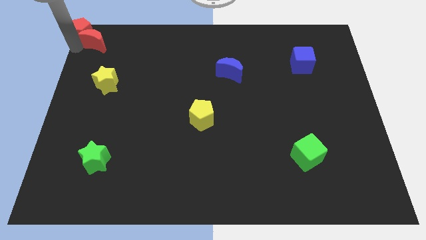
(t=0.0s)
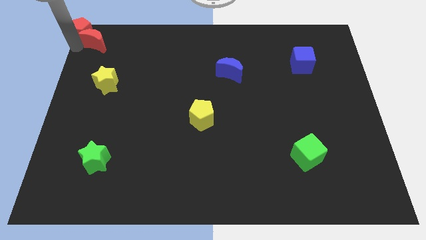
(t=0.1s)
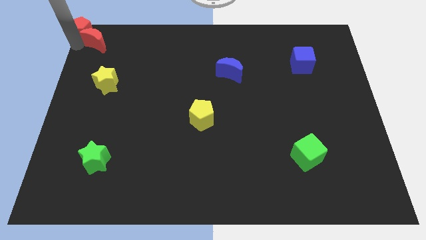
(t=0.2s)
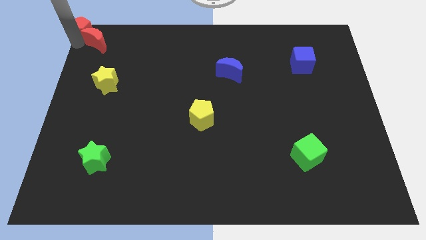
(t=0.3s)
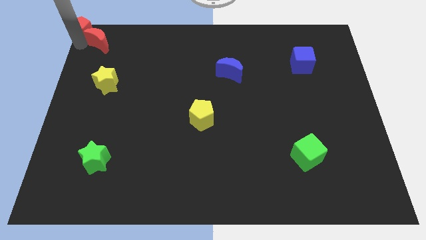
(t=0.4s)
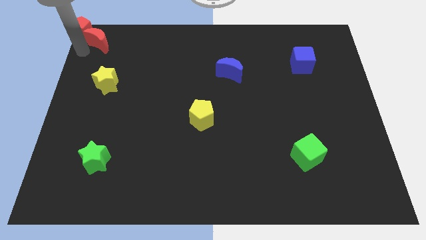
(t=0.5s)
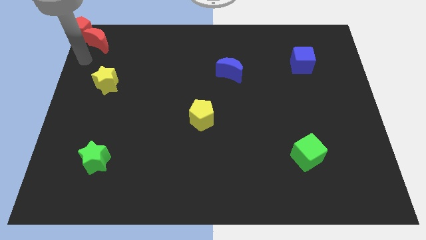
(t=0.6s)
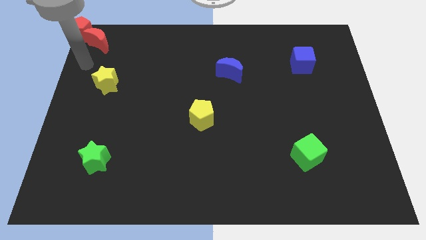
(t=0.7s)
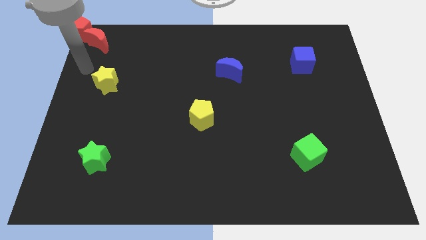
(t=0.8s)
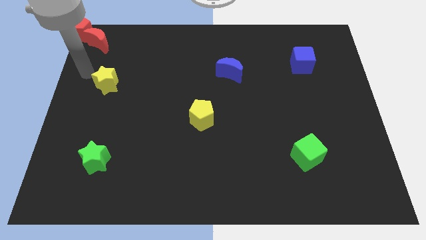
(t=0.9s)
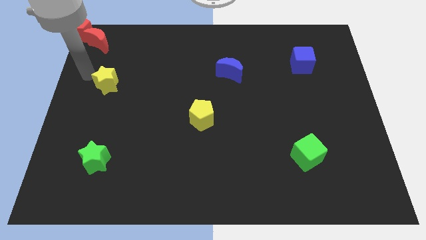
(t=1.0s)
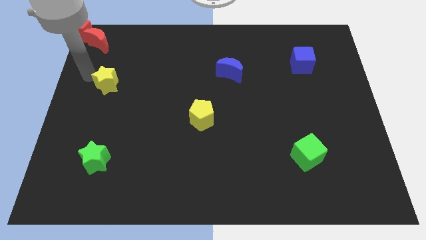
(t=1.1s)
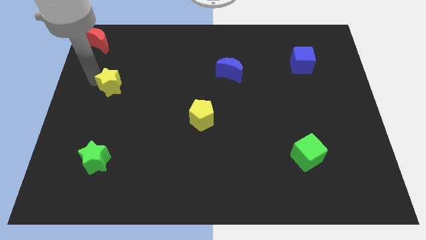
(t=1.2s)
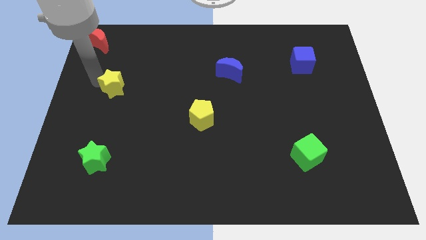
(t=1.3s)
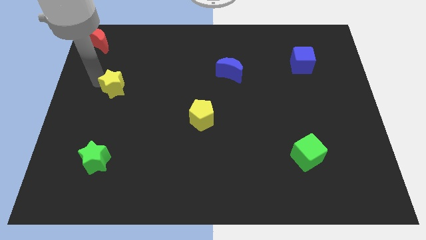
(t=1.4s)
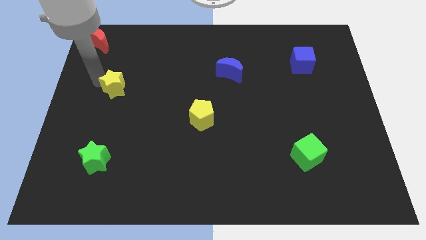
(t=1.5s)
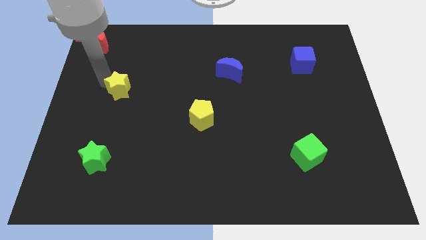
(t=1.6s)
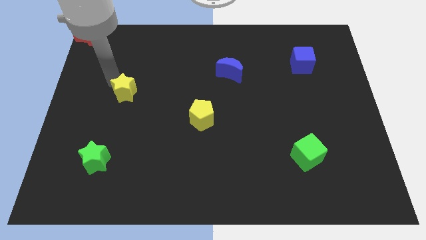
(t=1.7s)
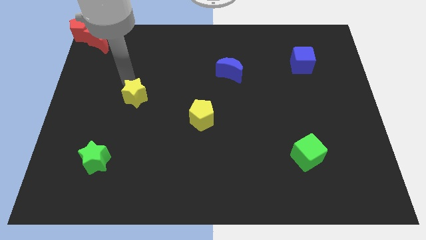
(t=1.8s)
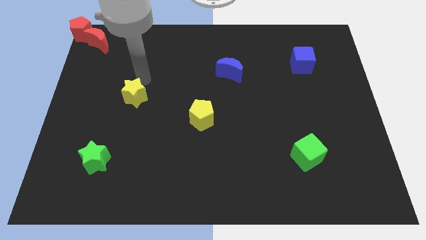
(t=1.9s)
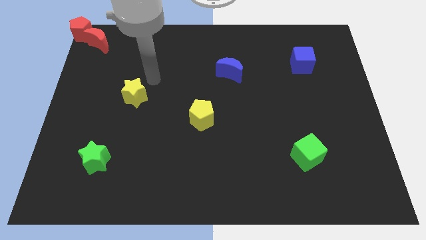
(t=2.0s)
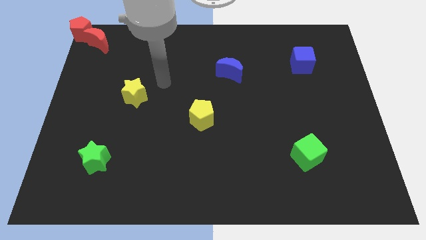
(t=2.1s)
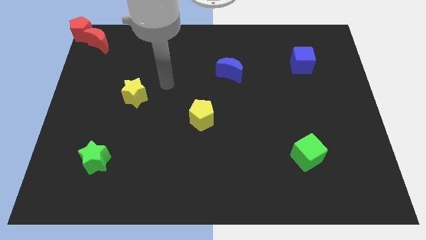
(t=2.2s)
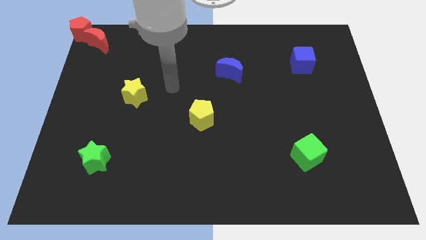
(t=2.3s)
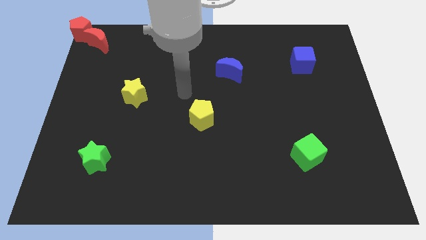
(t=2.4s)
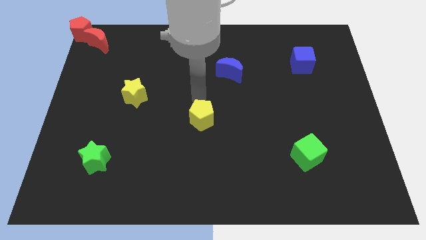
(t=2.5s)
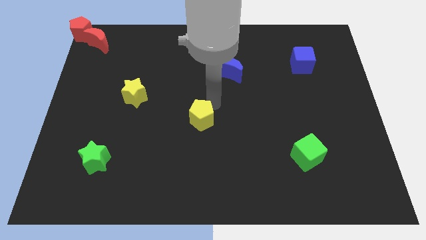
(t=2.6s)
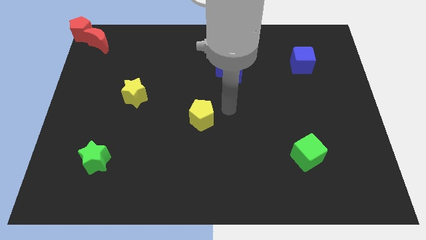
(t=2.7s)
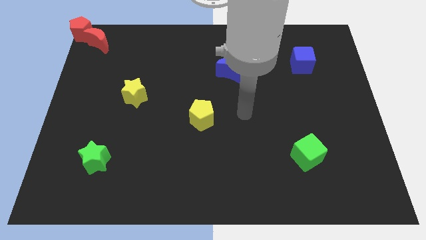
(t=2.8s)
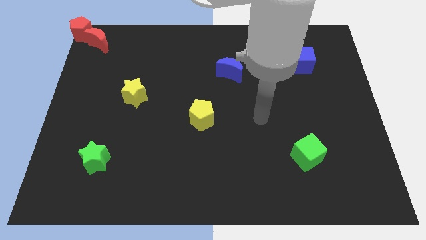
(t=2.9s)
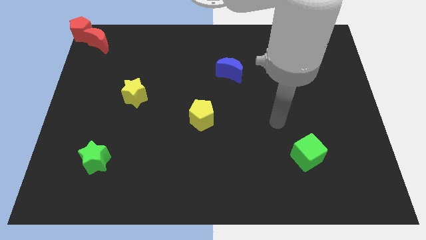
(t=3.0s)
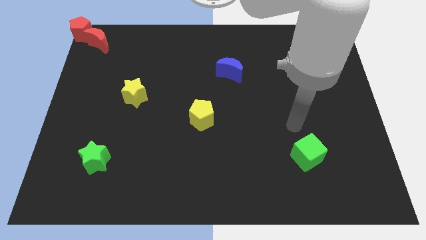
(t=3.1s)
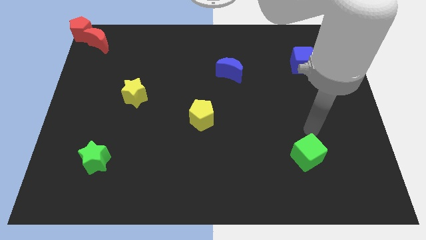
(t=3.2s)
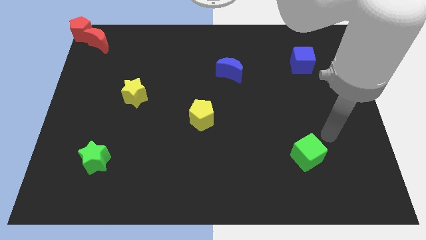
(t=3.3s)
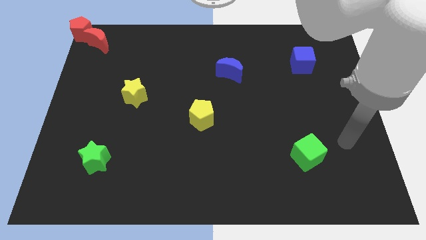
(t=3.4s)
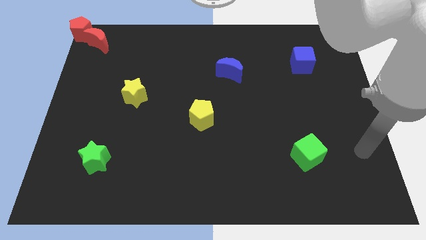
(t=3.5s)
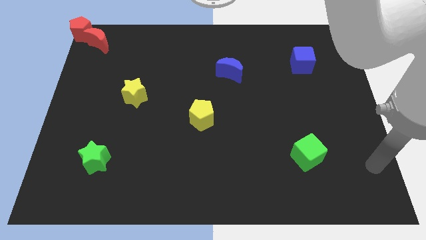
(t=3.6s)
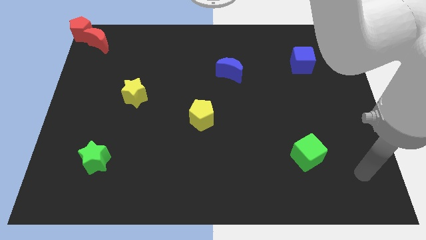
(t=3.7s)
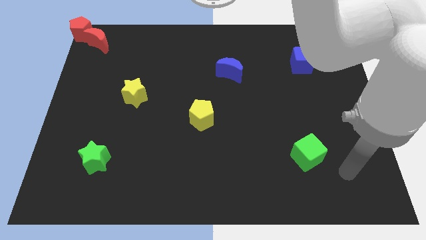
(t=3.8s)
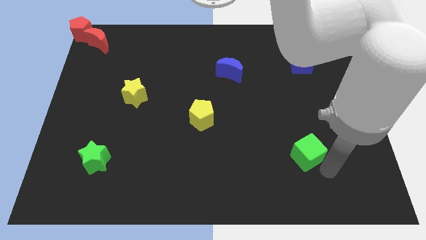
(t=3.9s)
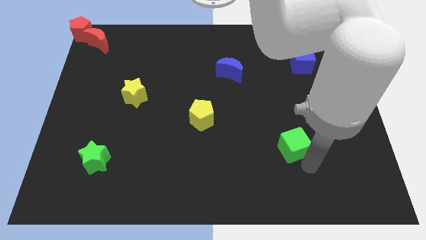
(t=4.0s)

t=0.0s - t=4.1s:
move the arm to the bottom of the green cube

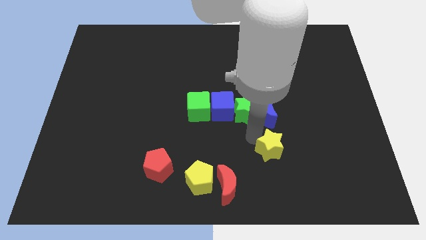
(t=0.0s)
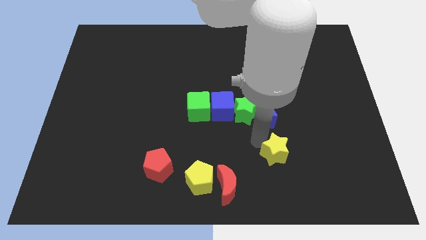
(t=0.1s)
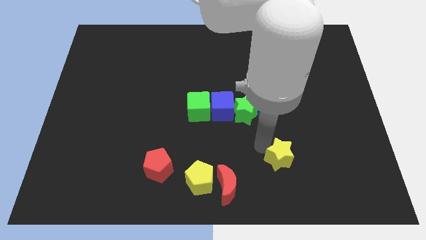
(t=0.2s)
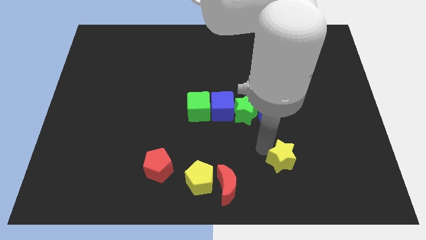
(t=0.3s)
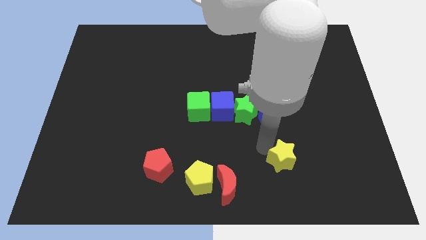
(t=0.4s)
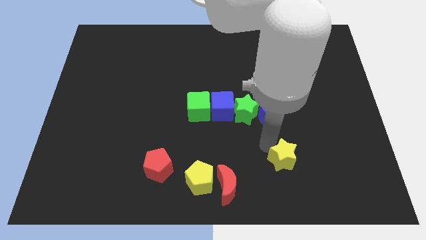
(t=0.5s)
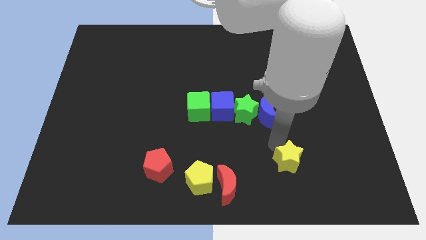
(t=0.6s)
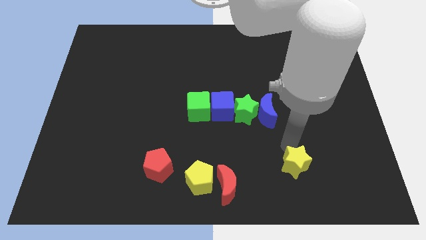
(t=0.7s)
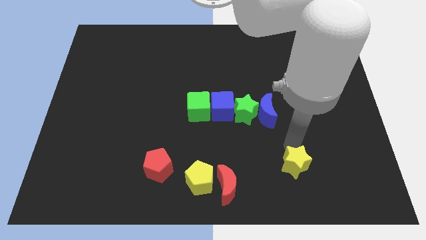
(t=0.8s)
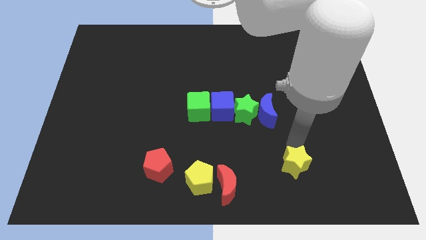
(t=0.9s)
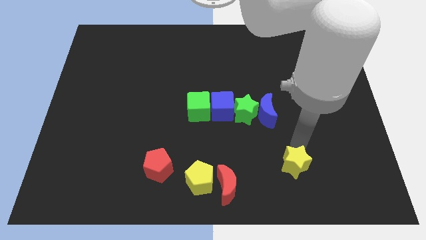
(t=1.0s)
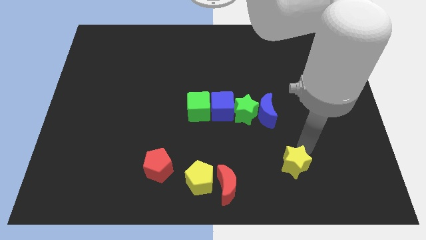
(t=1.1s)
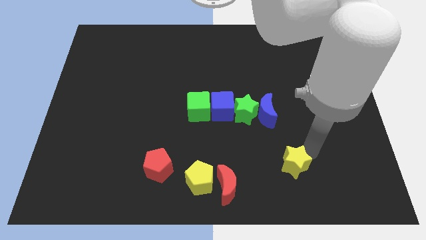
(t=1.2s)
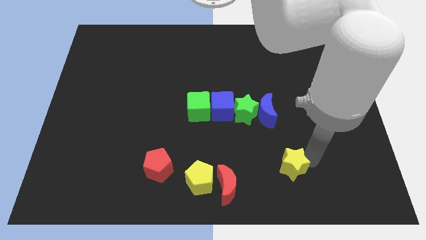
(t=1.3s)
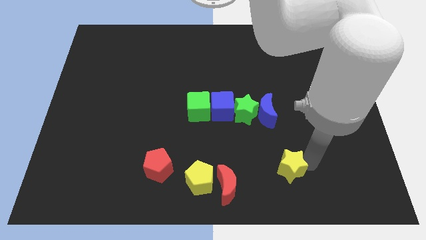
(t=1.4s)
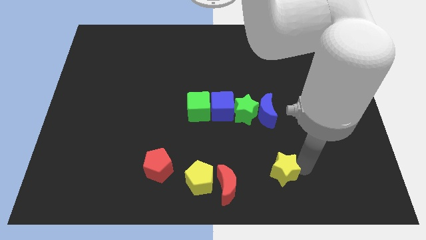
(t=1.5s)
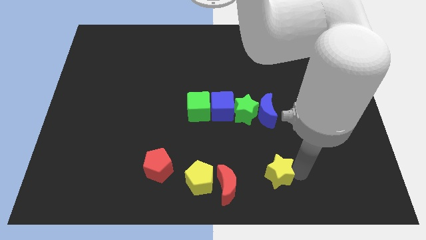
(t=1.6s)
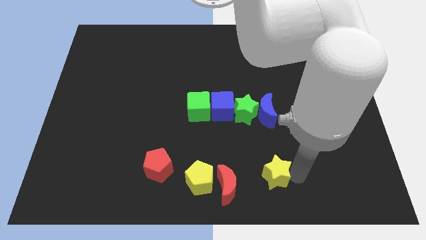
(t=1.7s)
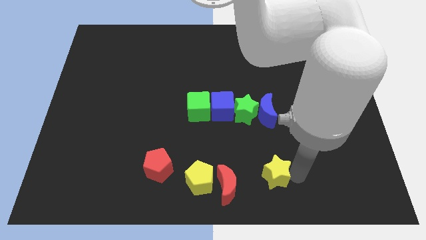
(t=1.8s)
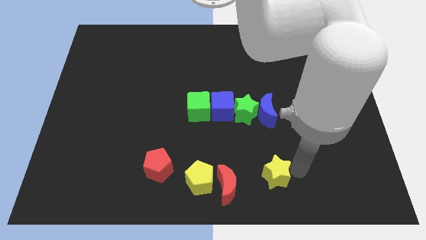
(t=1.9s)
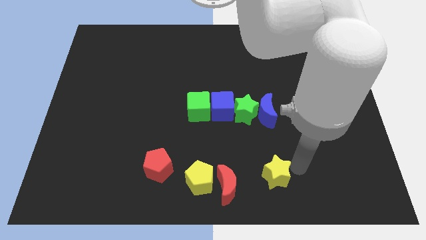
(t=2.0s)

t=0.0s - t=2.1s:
place the yellow star to the right of red crescent

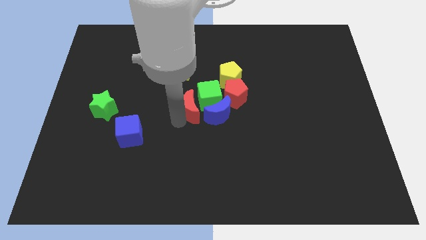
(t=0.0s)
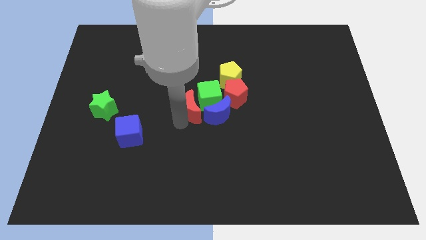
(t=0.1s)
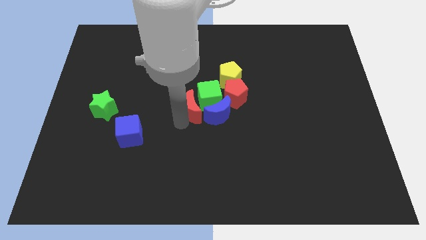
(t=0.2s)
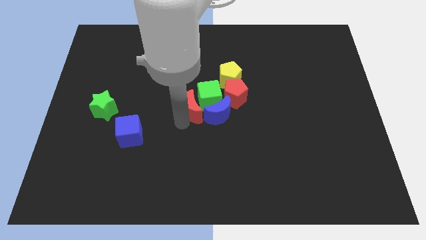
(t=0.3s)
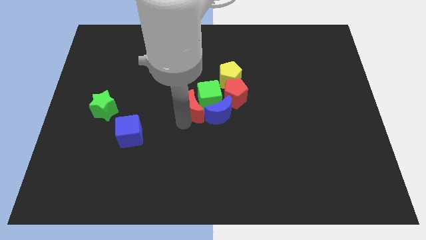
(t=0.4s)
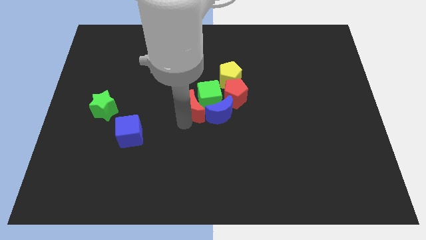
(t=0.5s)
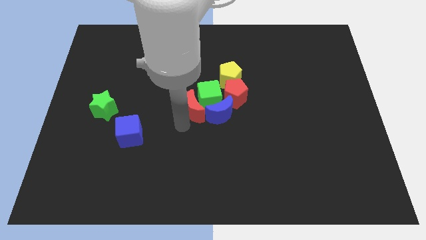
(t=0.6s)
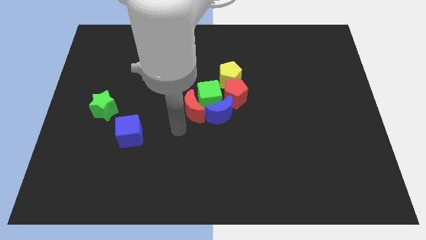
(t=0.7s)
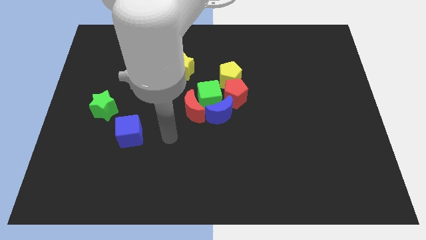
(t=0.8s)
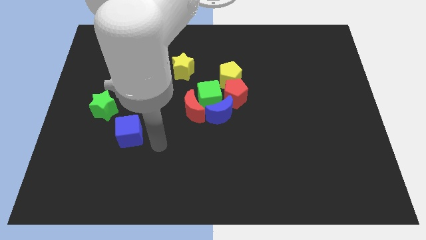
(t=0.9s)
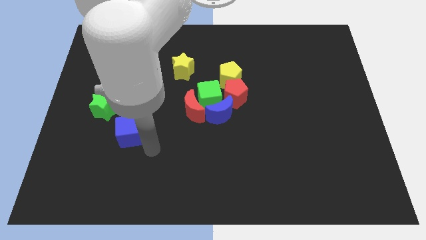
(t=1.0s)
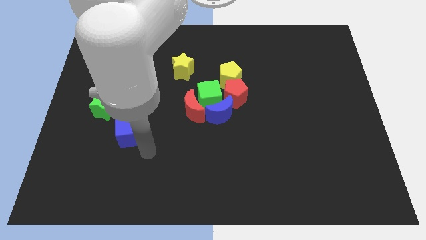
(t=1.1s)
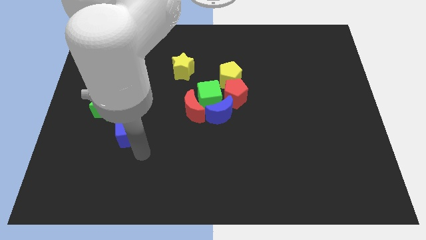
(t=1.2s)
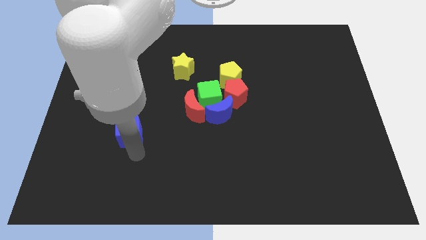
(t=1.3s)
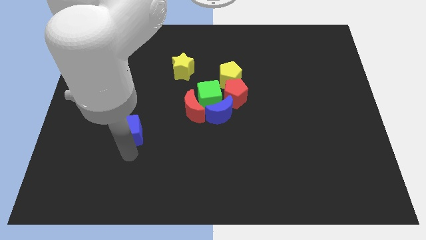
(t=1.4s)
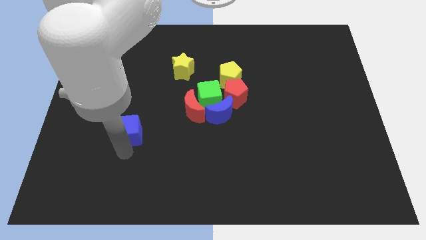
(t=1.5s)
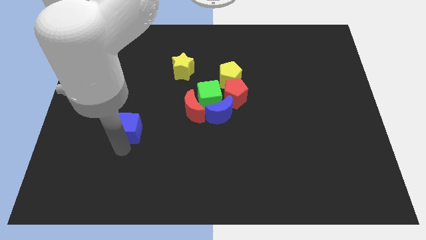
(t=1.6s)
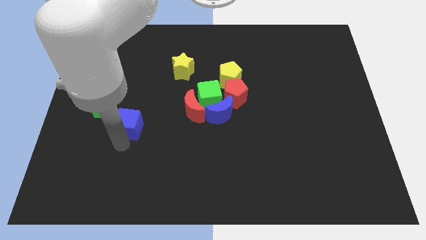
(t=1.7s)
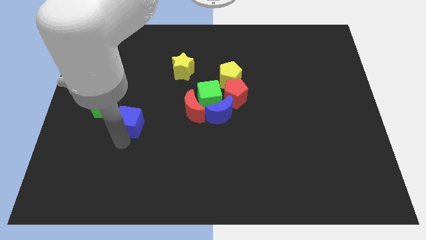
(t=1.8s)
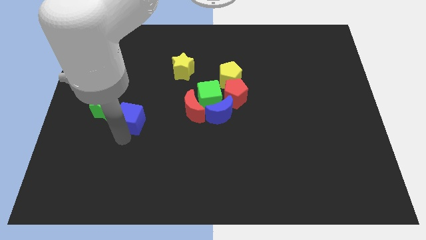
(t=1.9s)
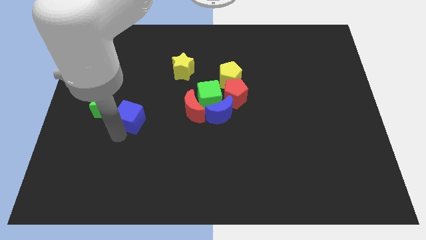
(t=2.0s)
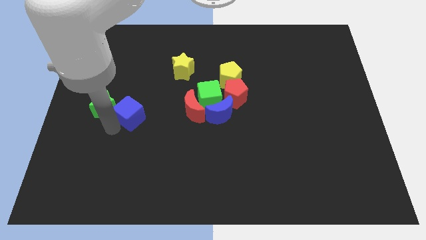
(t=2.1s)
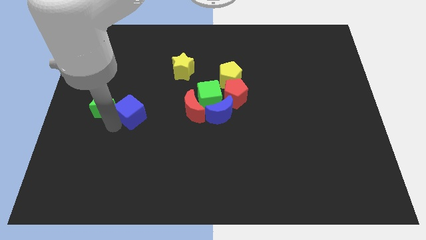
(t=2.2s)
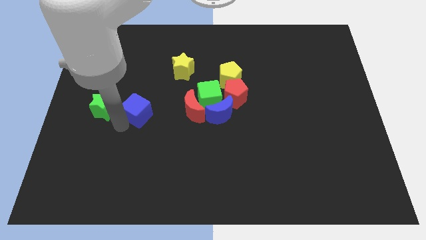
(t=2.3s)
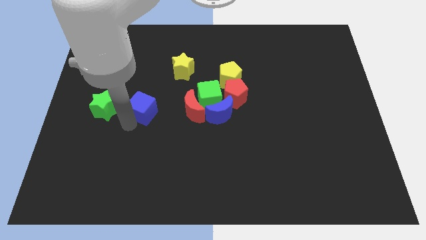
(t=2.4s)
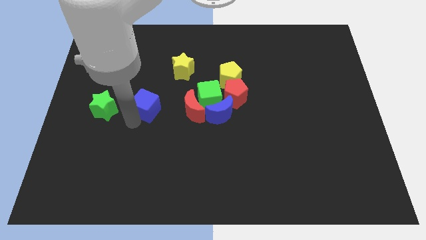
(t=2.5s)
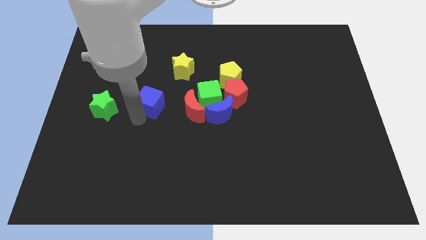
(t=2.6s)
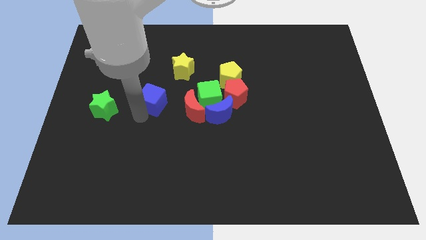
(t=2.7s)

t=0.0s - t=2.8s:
place the blue cube in between the green star and red crescent
